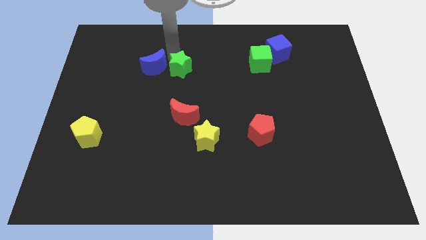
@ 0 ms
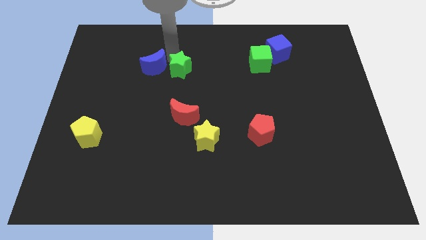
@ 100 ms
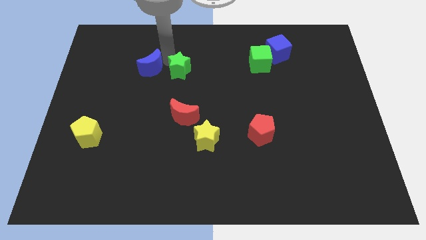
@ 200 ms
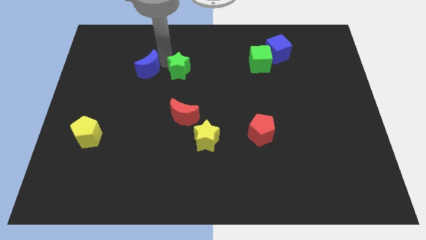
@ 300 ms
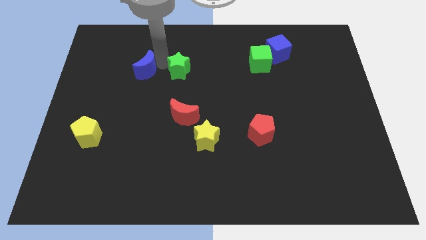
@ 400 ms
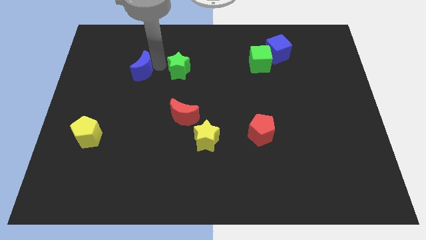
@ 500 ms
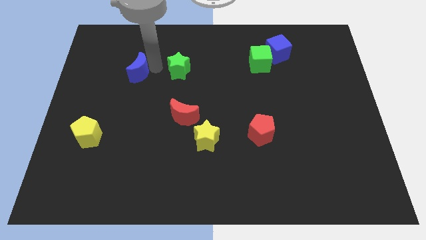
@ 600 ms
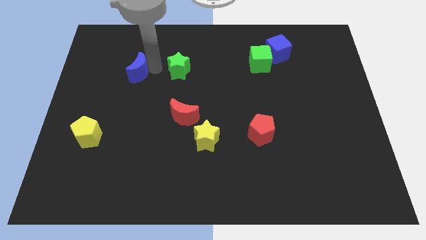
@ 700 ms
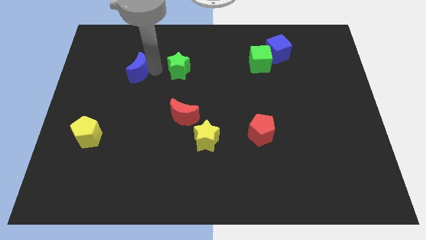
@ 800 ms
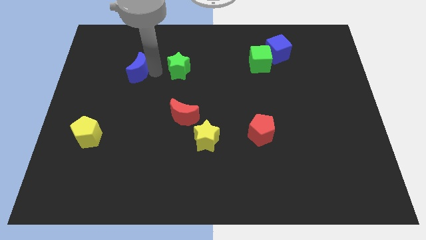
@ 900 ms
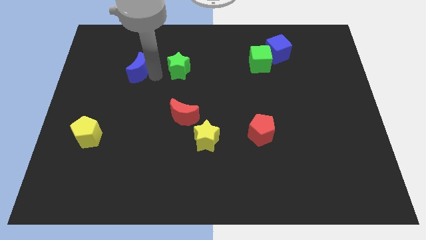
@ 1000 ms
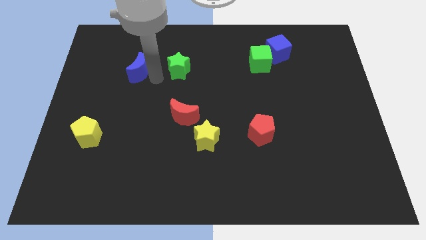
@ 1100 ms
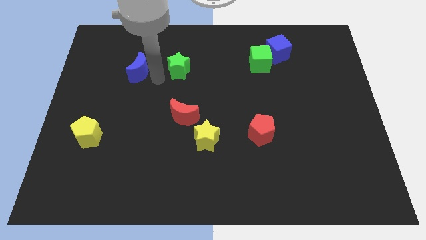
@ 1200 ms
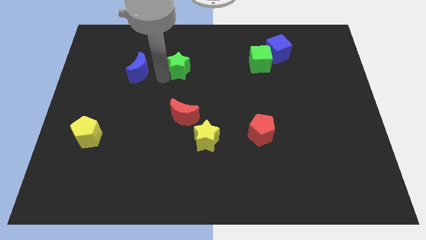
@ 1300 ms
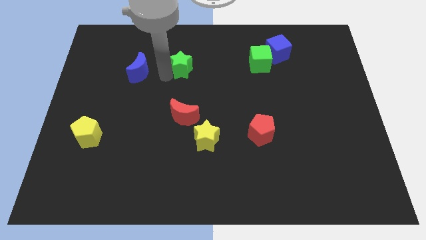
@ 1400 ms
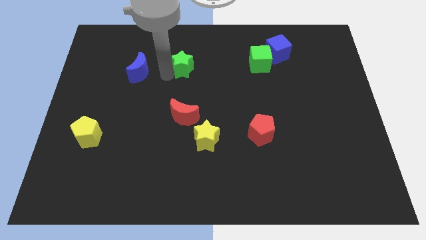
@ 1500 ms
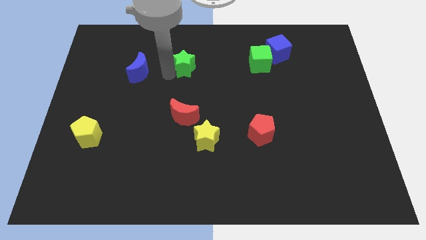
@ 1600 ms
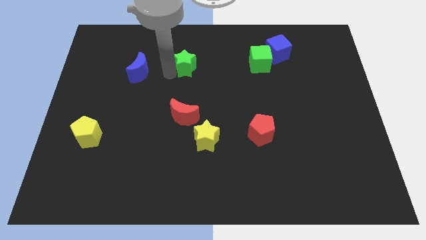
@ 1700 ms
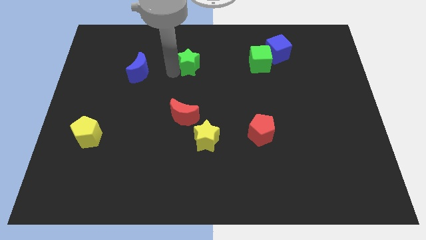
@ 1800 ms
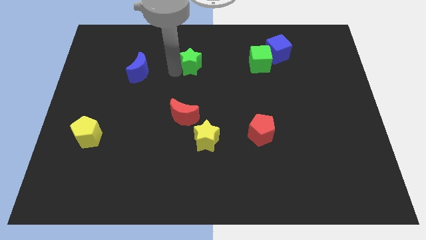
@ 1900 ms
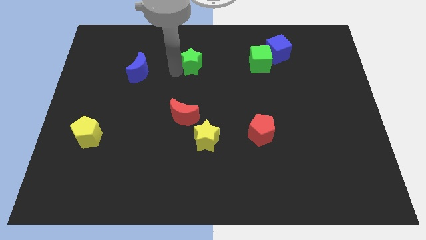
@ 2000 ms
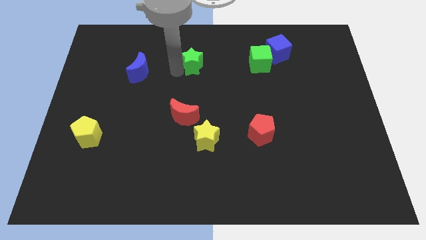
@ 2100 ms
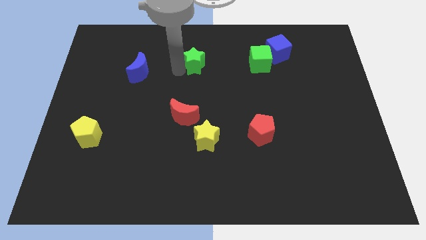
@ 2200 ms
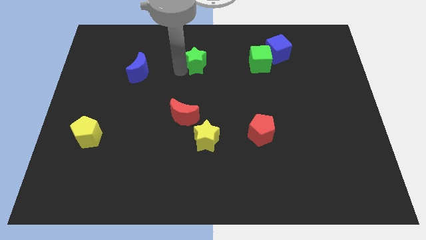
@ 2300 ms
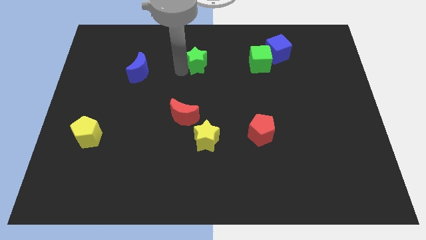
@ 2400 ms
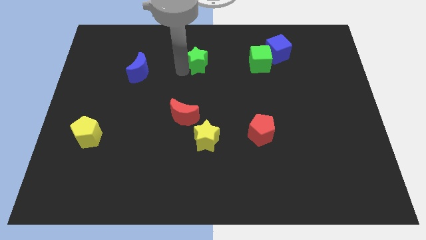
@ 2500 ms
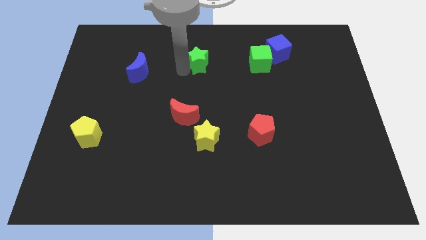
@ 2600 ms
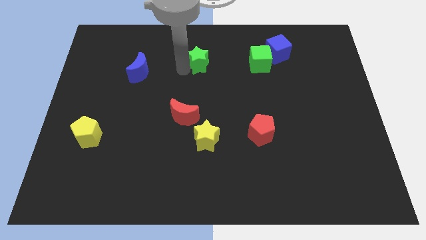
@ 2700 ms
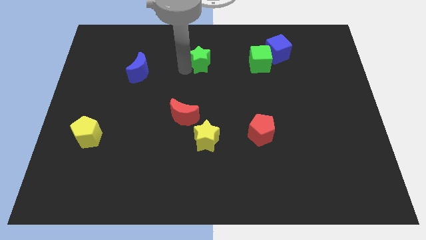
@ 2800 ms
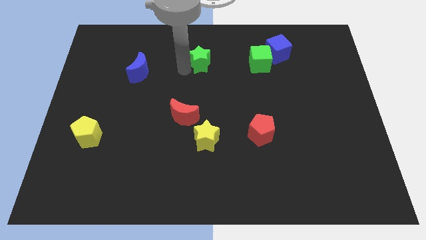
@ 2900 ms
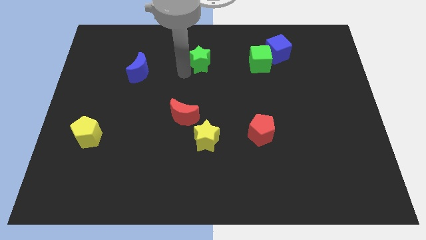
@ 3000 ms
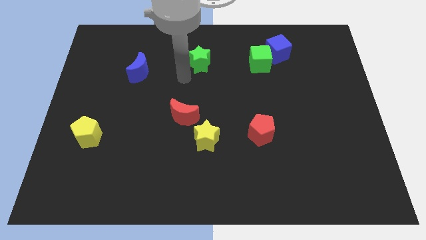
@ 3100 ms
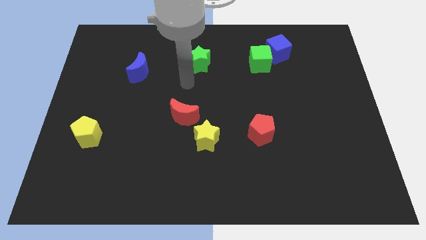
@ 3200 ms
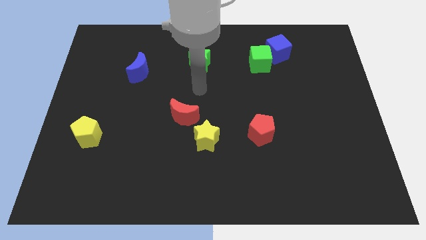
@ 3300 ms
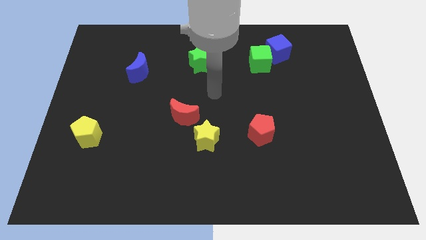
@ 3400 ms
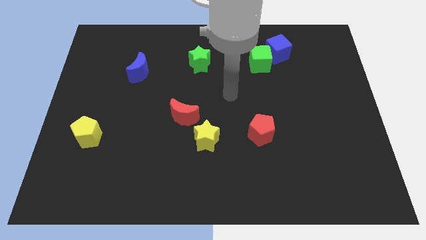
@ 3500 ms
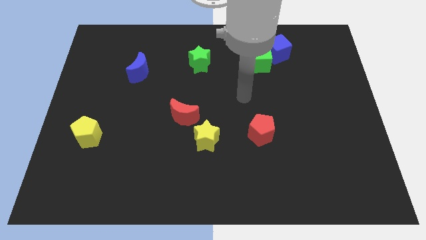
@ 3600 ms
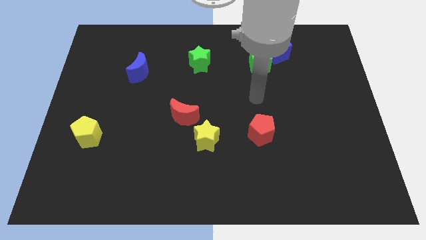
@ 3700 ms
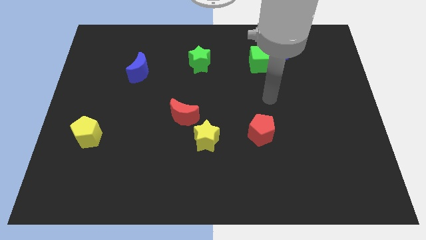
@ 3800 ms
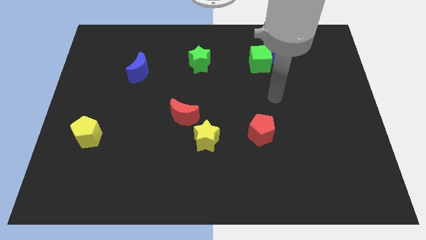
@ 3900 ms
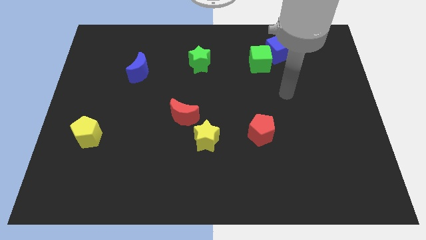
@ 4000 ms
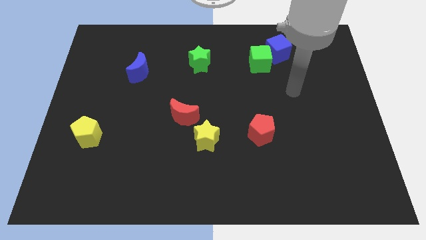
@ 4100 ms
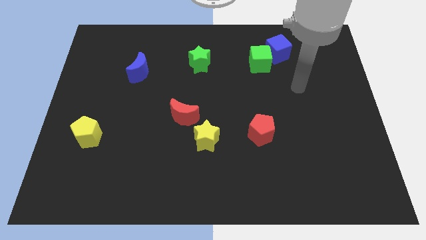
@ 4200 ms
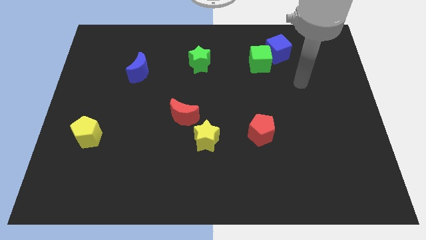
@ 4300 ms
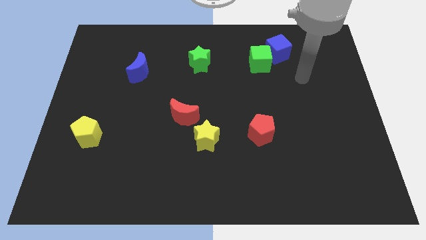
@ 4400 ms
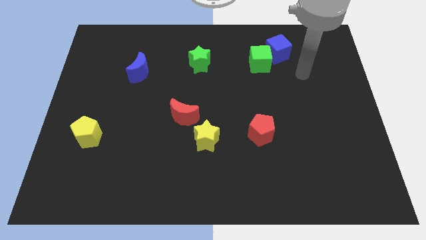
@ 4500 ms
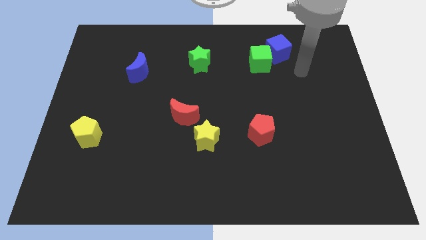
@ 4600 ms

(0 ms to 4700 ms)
push the green star to the right of the board

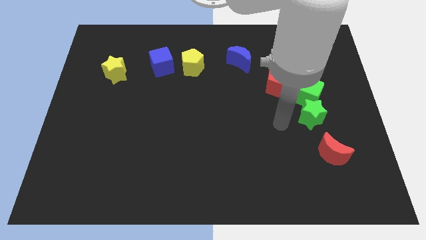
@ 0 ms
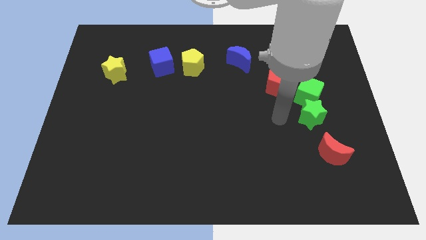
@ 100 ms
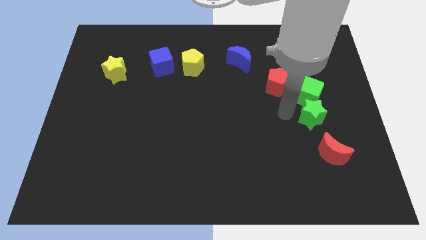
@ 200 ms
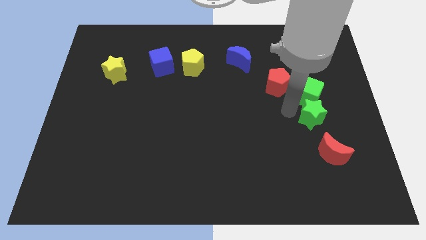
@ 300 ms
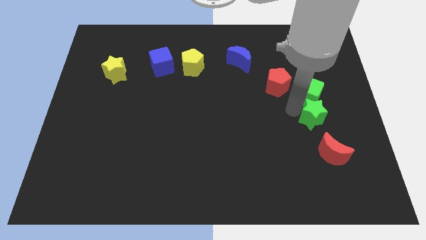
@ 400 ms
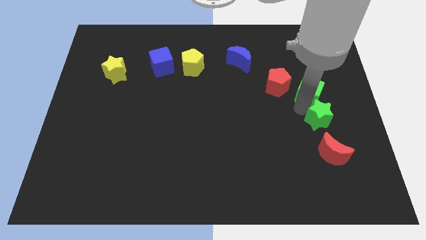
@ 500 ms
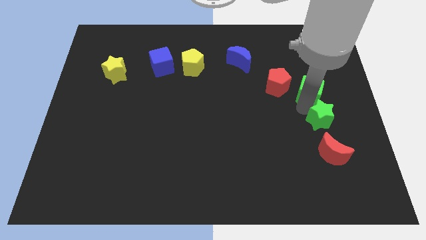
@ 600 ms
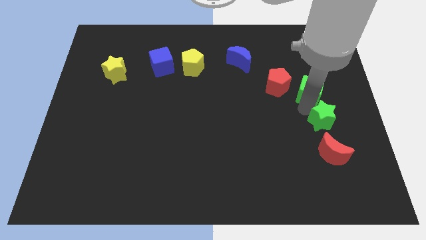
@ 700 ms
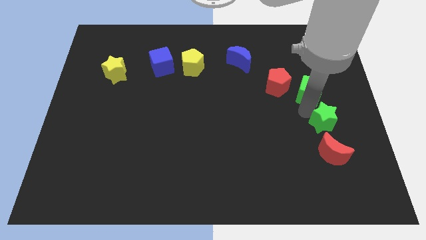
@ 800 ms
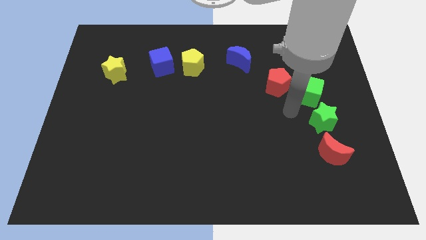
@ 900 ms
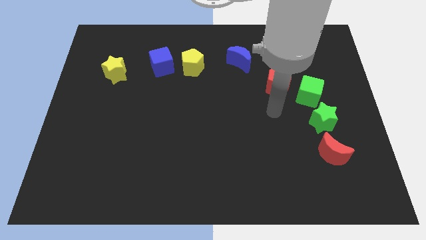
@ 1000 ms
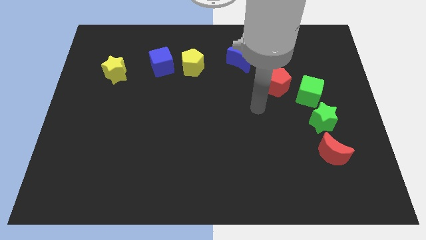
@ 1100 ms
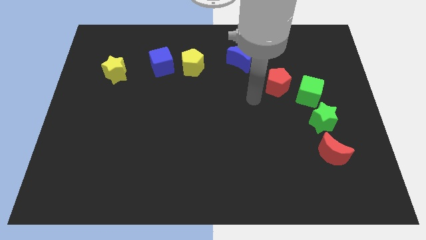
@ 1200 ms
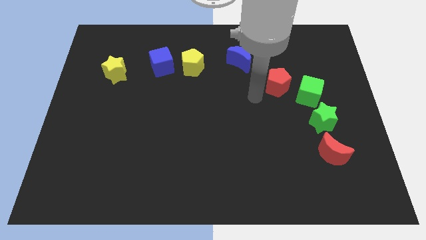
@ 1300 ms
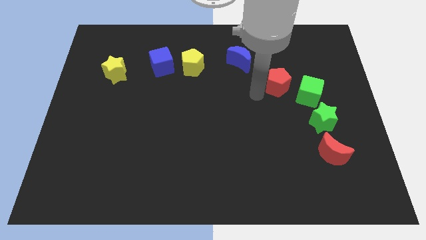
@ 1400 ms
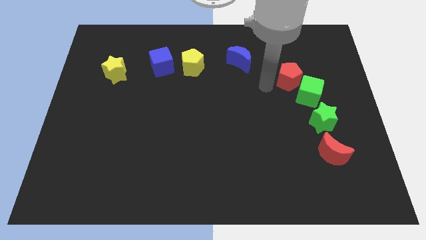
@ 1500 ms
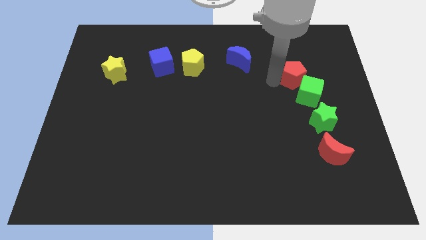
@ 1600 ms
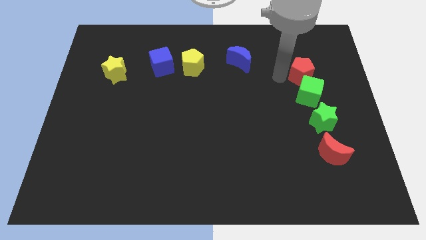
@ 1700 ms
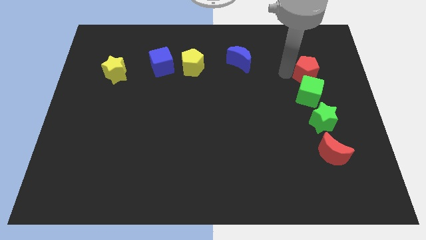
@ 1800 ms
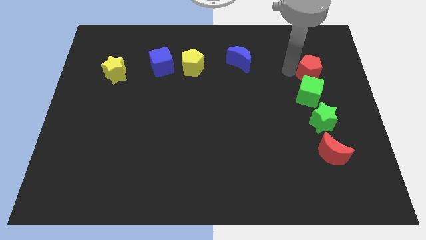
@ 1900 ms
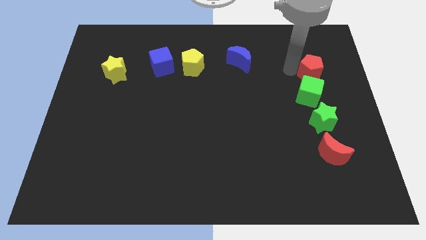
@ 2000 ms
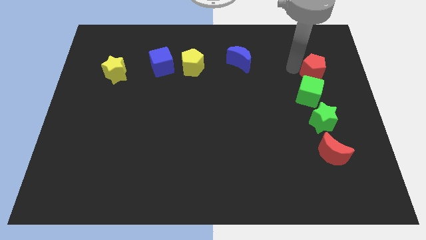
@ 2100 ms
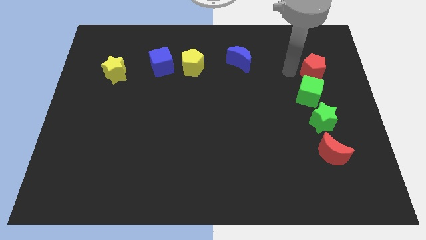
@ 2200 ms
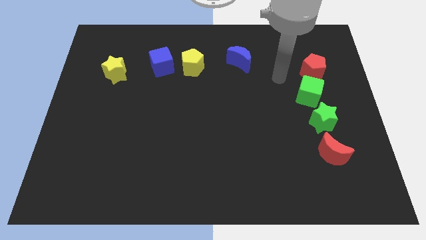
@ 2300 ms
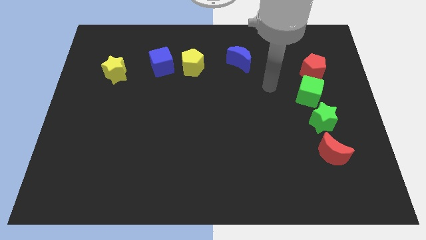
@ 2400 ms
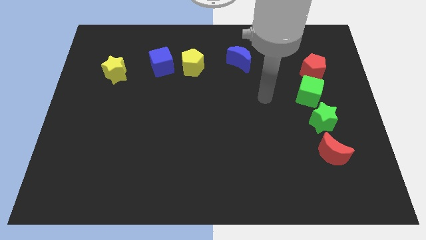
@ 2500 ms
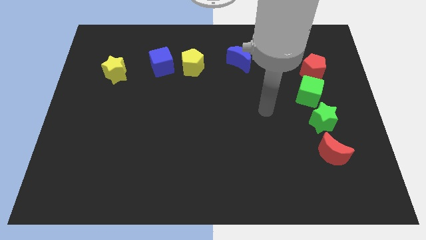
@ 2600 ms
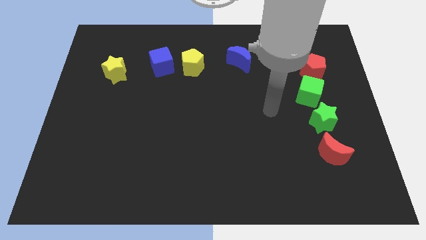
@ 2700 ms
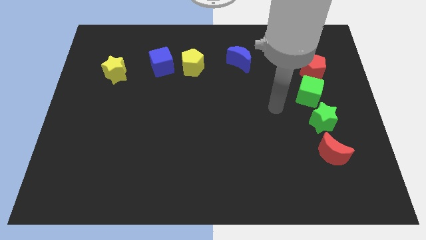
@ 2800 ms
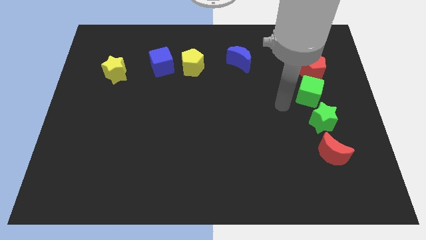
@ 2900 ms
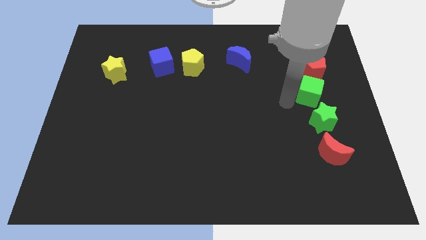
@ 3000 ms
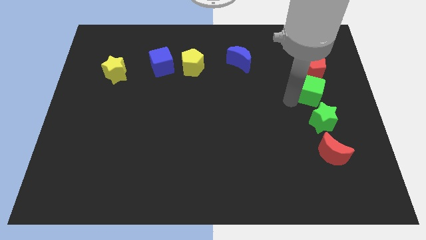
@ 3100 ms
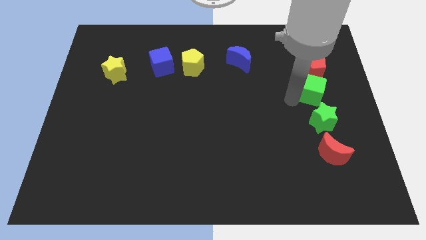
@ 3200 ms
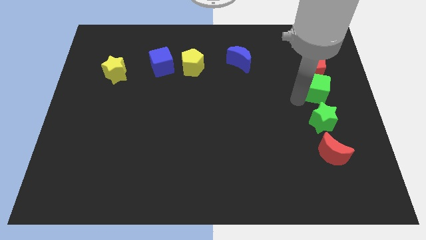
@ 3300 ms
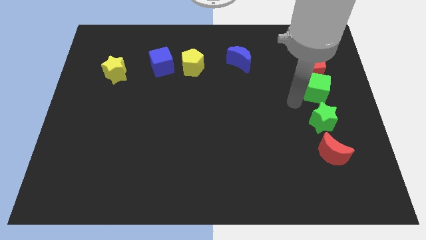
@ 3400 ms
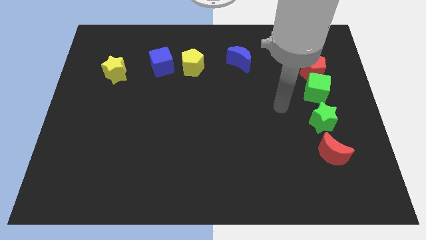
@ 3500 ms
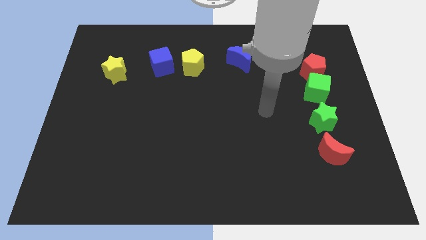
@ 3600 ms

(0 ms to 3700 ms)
adjust the red pentagon and the green cube to form a vertical line

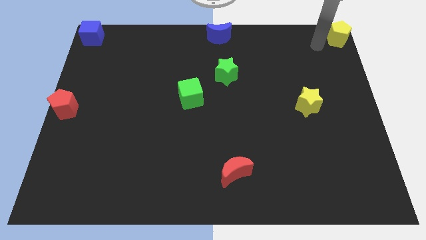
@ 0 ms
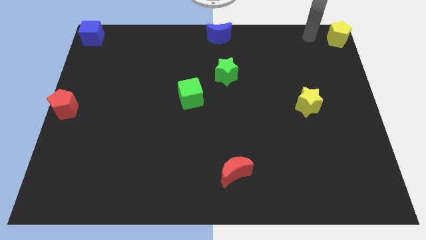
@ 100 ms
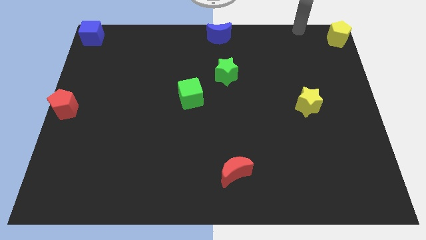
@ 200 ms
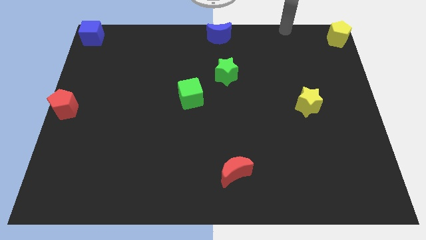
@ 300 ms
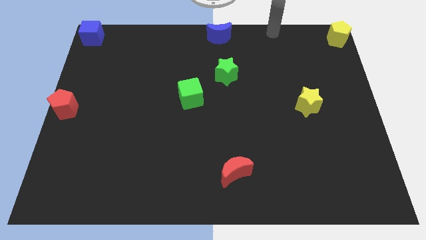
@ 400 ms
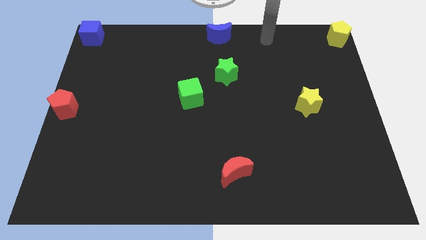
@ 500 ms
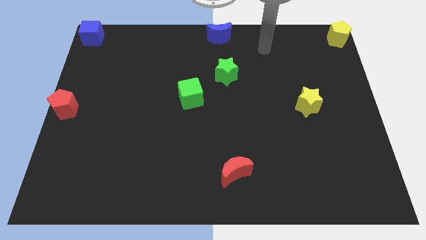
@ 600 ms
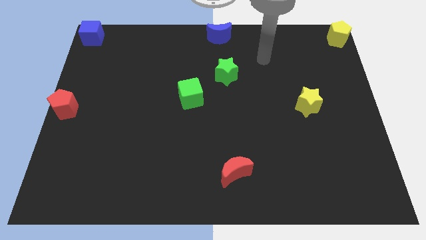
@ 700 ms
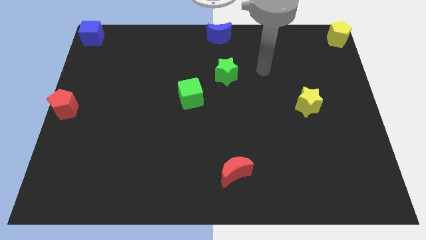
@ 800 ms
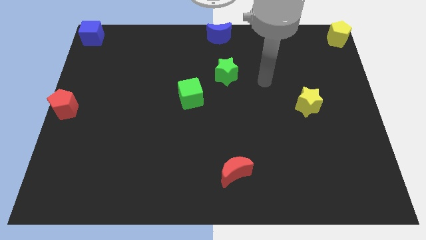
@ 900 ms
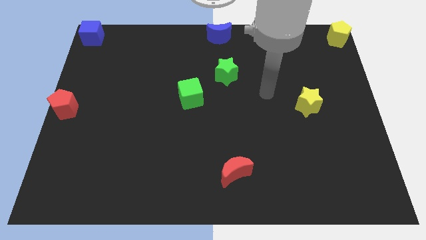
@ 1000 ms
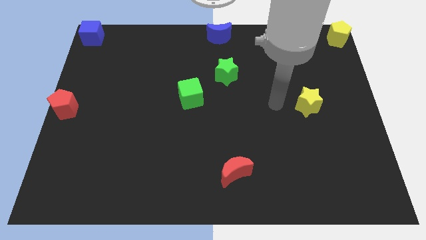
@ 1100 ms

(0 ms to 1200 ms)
put your arm in between the green and yellow stars
